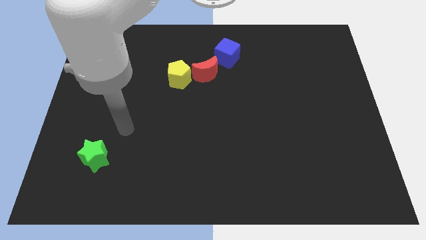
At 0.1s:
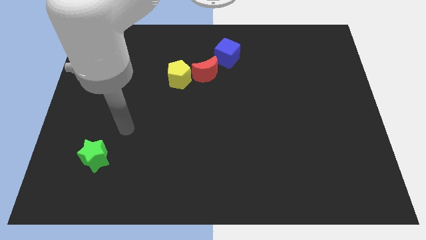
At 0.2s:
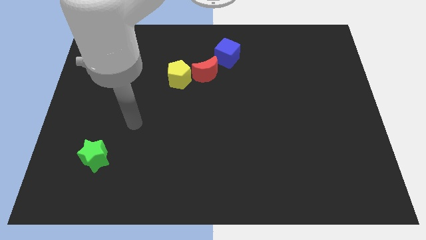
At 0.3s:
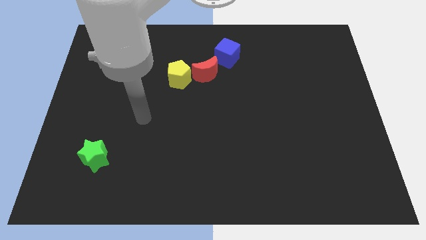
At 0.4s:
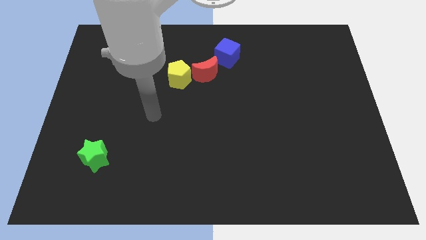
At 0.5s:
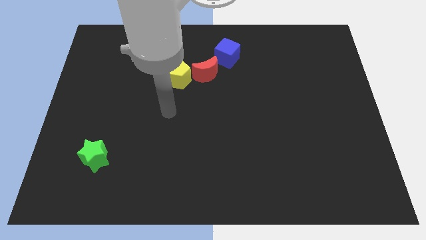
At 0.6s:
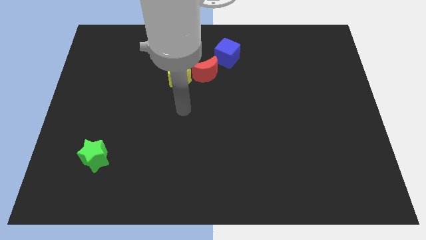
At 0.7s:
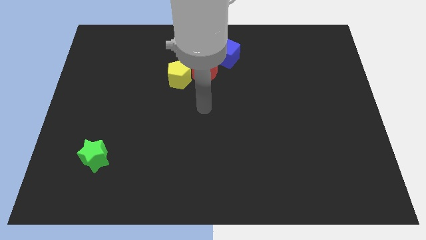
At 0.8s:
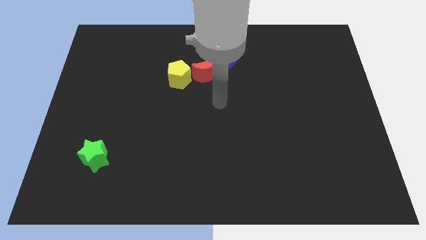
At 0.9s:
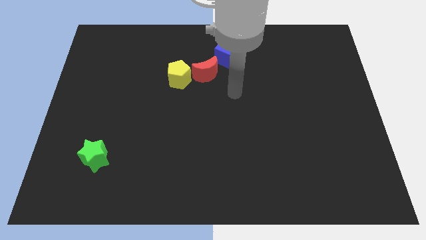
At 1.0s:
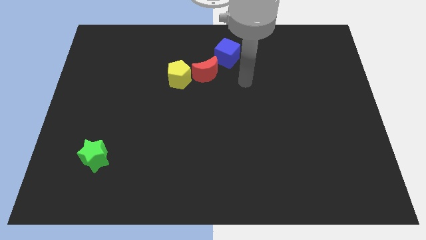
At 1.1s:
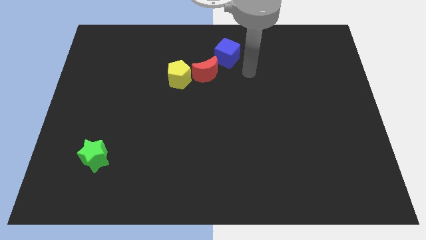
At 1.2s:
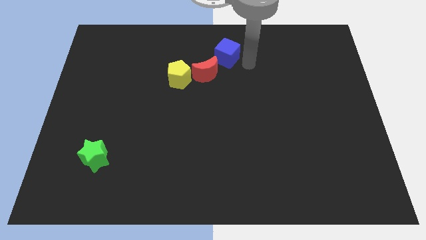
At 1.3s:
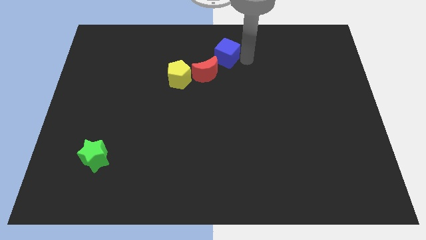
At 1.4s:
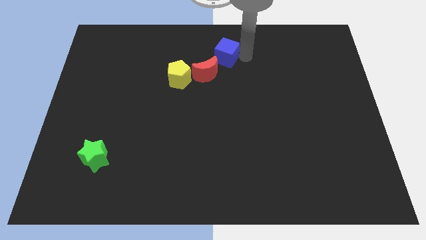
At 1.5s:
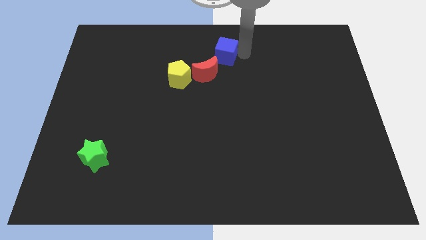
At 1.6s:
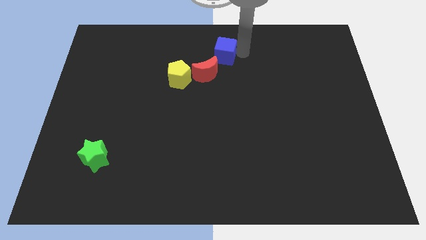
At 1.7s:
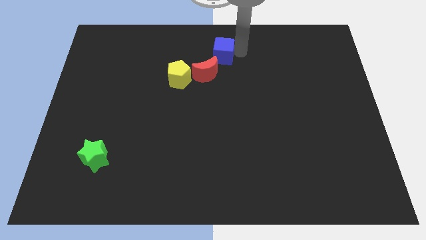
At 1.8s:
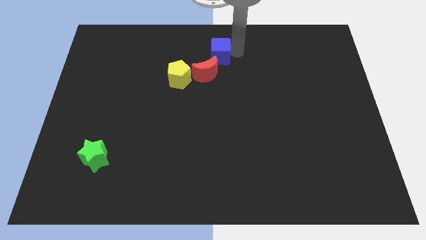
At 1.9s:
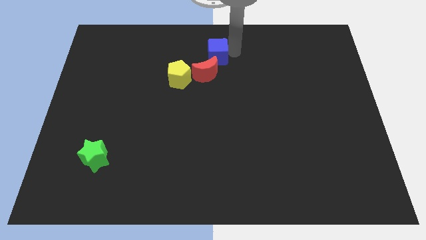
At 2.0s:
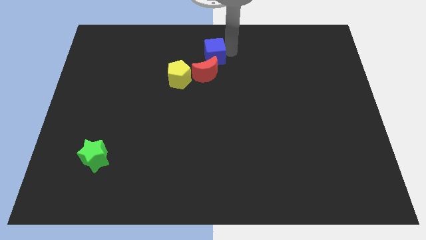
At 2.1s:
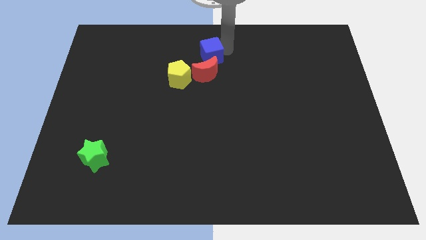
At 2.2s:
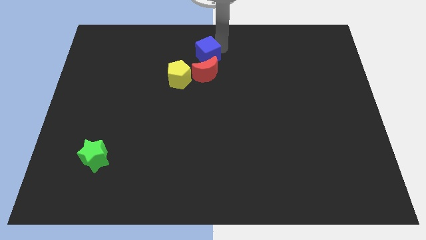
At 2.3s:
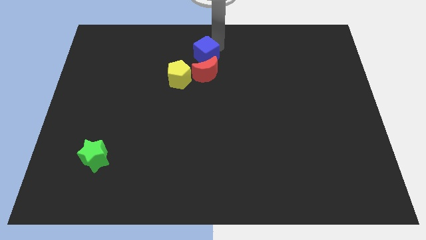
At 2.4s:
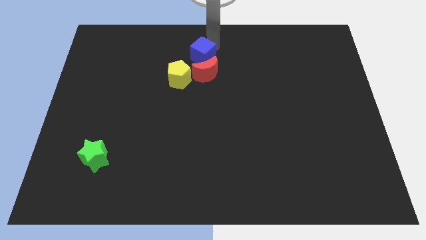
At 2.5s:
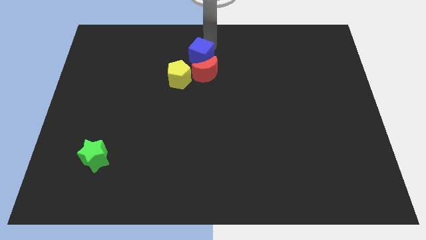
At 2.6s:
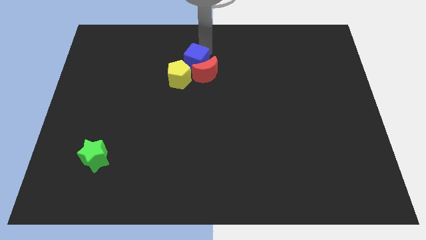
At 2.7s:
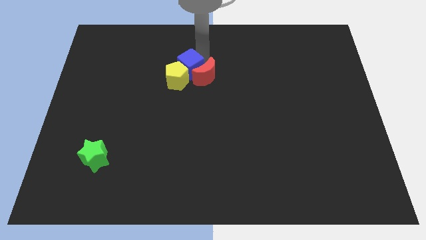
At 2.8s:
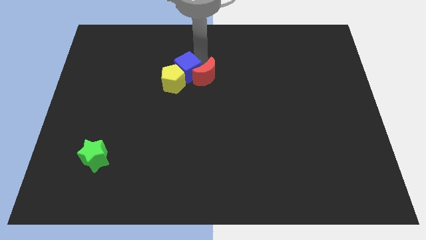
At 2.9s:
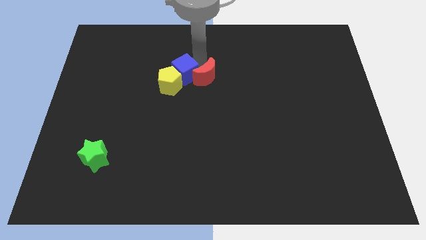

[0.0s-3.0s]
slide the blue cube to the pentagon

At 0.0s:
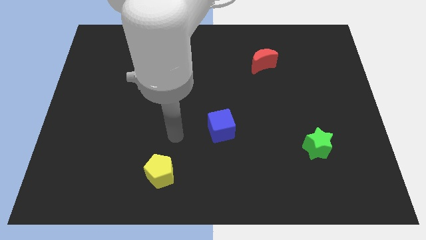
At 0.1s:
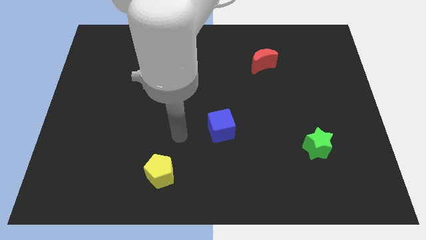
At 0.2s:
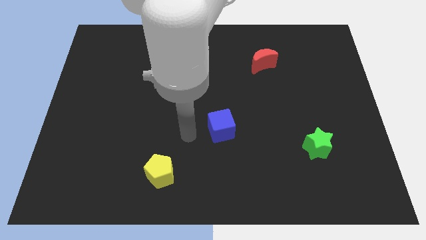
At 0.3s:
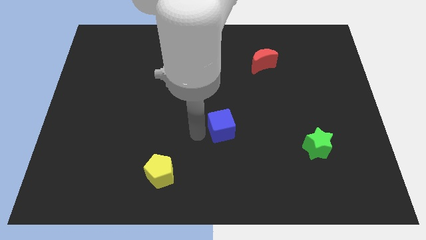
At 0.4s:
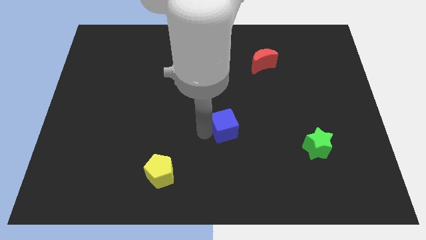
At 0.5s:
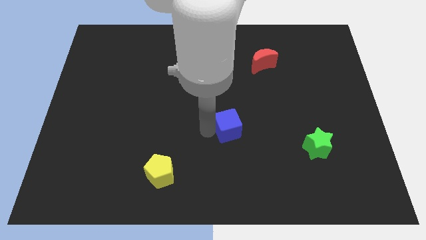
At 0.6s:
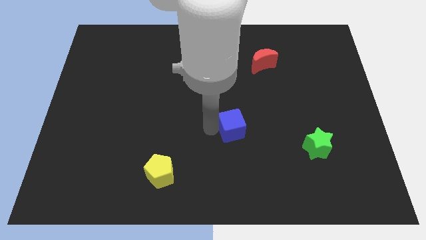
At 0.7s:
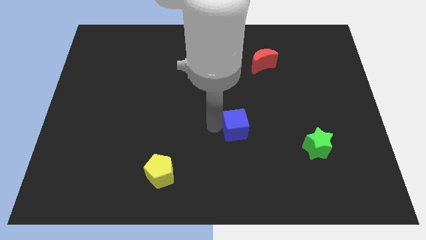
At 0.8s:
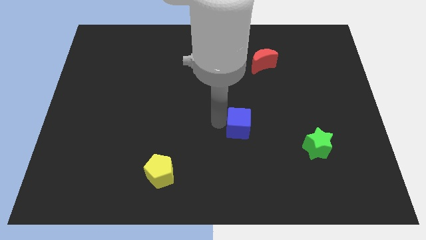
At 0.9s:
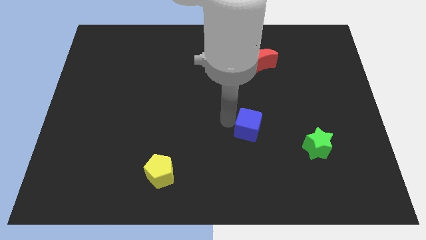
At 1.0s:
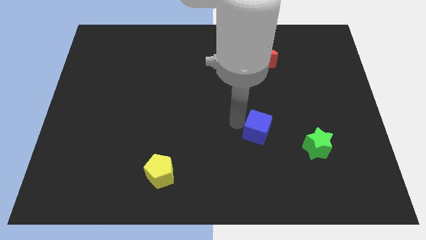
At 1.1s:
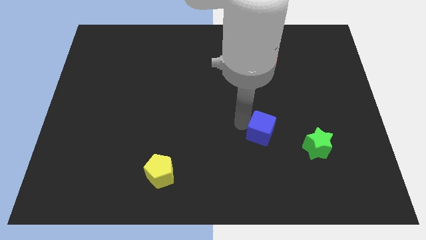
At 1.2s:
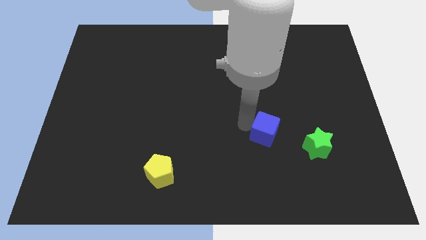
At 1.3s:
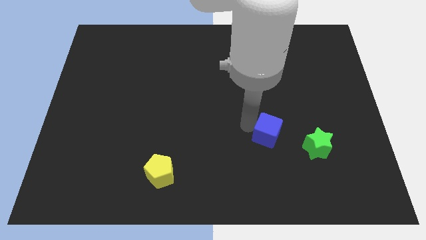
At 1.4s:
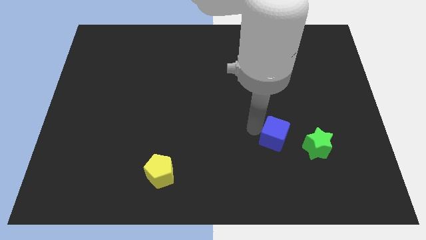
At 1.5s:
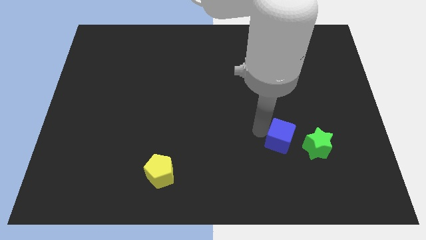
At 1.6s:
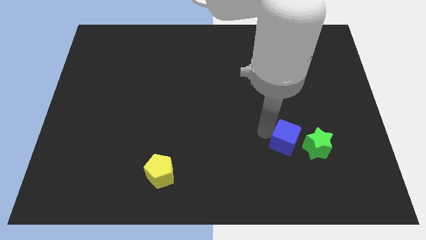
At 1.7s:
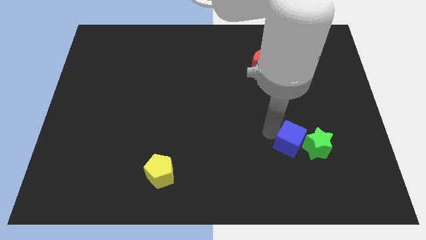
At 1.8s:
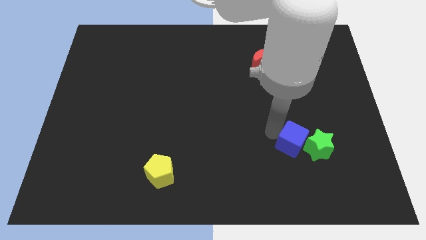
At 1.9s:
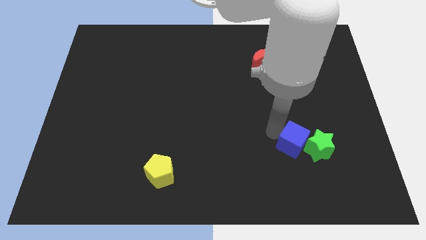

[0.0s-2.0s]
push the blue cube to the star

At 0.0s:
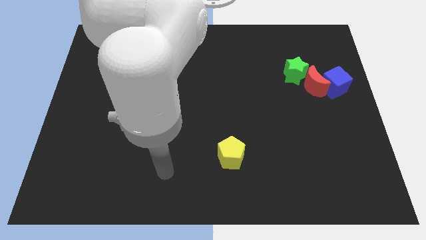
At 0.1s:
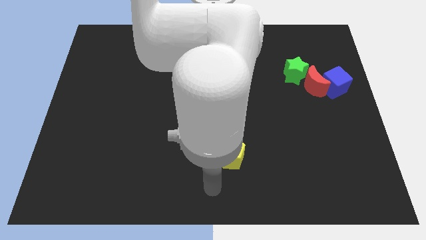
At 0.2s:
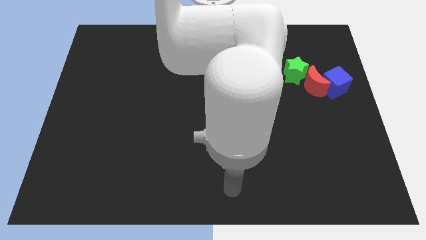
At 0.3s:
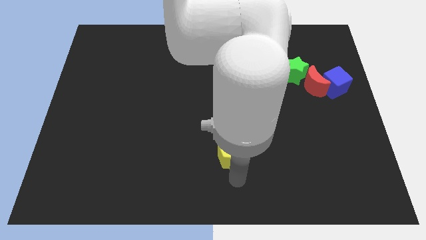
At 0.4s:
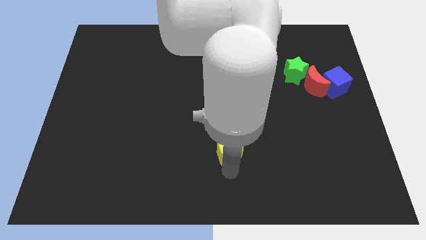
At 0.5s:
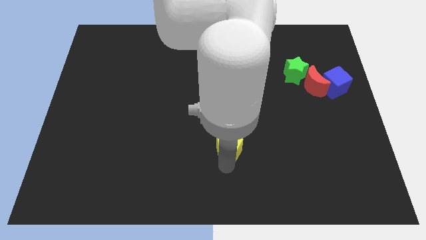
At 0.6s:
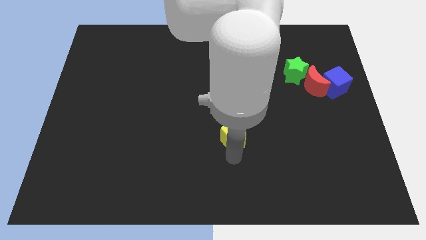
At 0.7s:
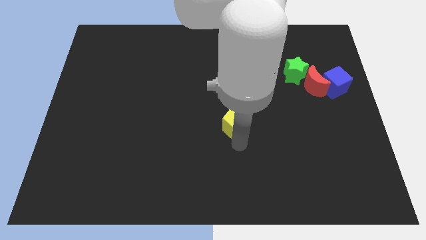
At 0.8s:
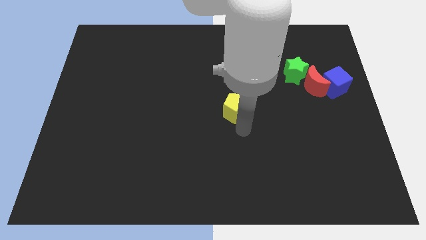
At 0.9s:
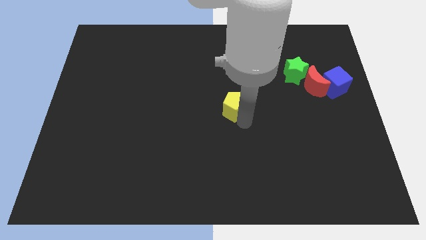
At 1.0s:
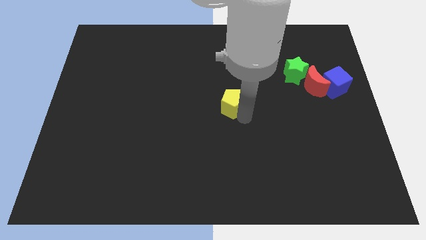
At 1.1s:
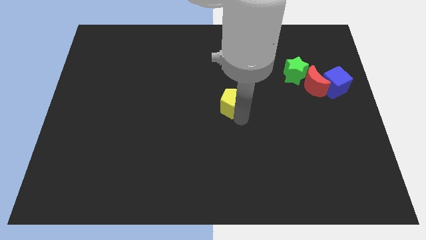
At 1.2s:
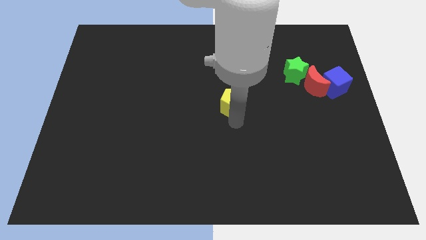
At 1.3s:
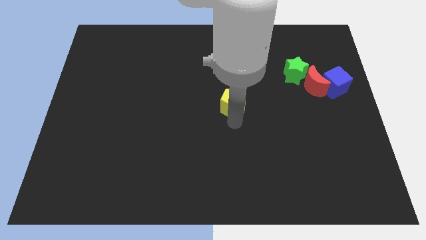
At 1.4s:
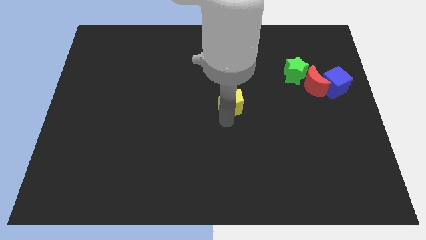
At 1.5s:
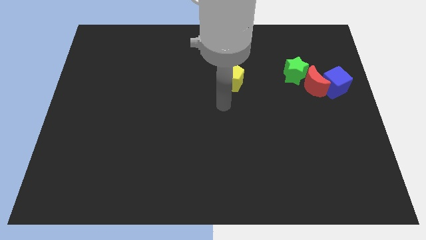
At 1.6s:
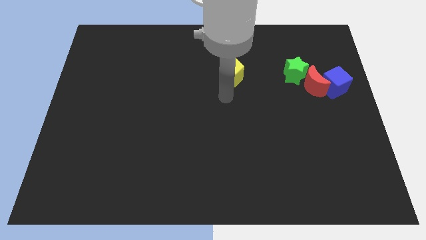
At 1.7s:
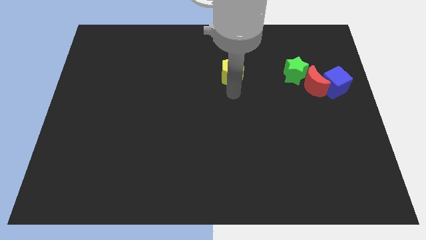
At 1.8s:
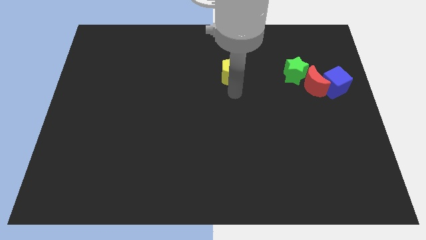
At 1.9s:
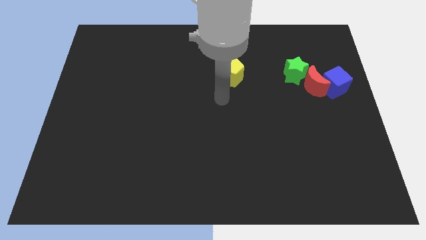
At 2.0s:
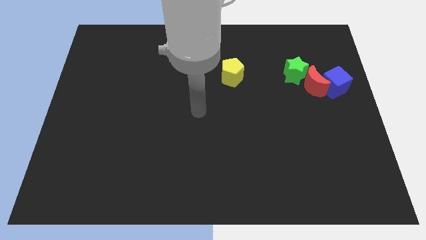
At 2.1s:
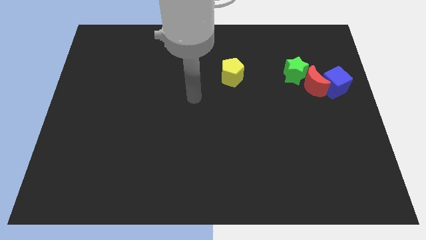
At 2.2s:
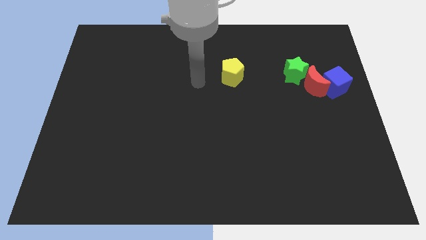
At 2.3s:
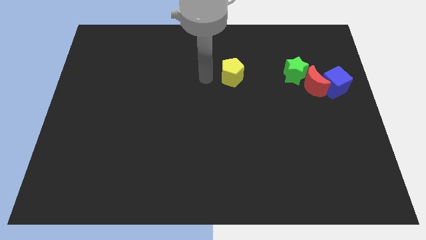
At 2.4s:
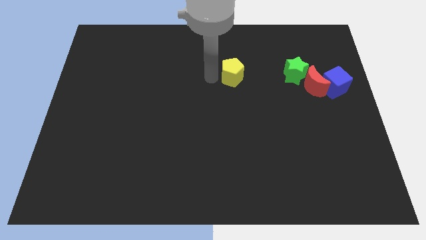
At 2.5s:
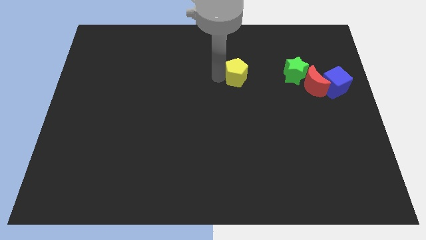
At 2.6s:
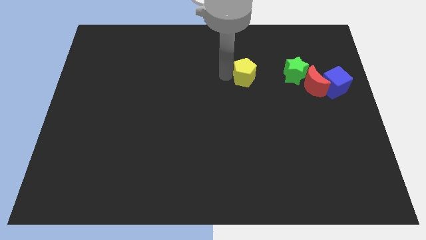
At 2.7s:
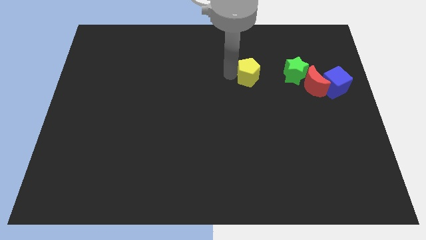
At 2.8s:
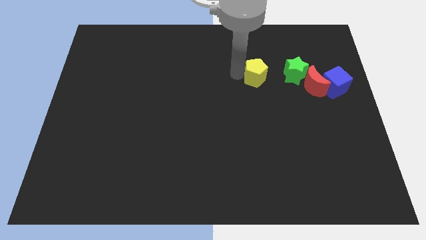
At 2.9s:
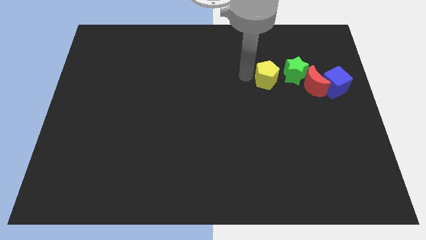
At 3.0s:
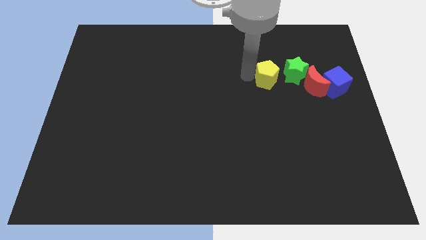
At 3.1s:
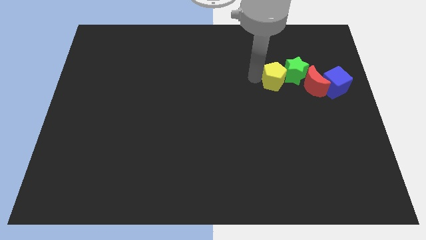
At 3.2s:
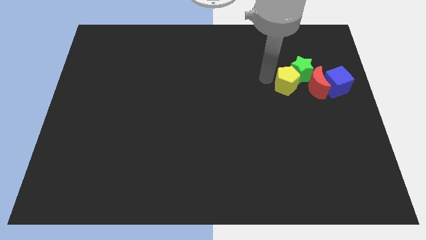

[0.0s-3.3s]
push the yellow block to the star
